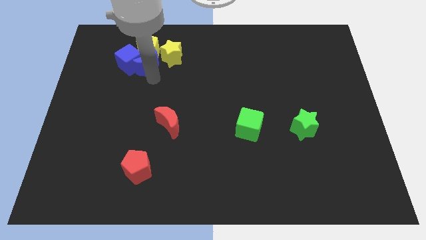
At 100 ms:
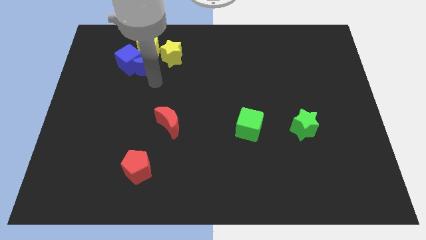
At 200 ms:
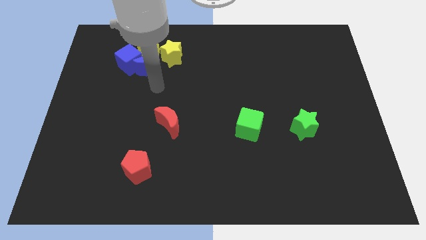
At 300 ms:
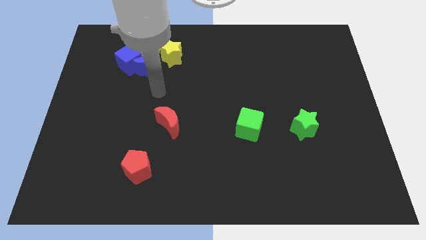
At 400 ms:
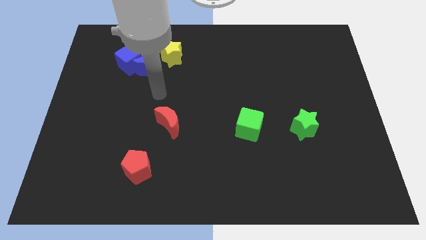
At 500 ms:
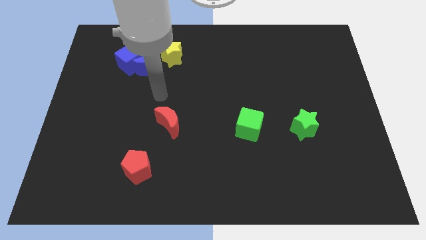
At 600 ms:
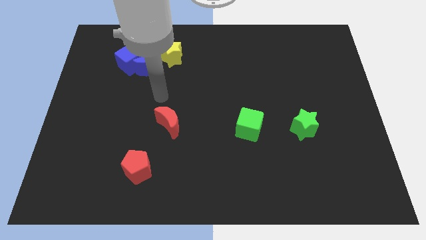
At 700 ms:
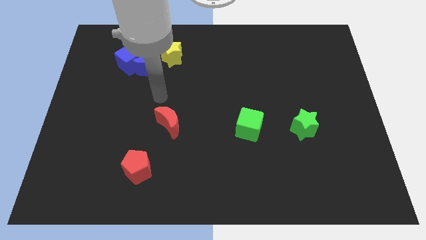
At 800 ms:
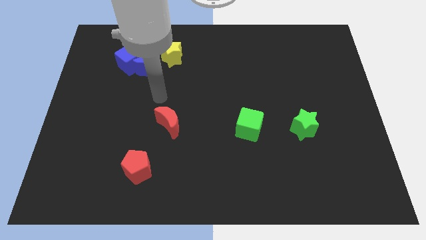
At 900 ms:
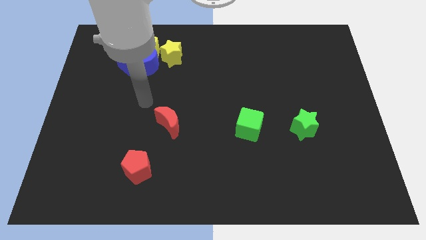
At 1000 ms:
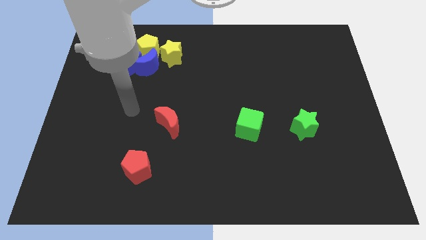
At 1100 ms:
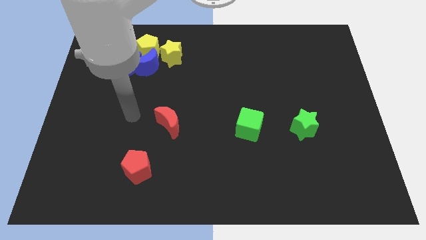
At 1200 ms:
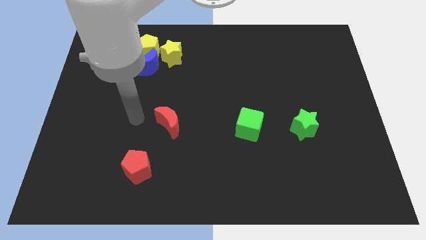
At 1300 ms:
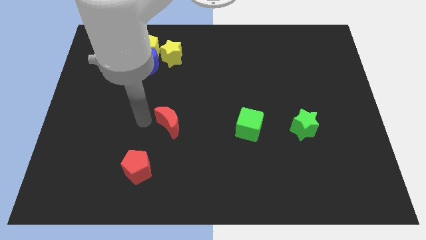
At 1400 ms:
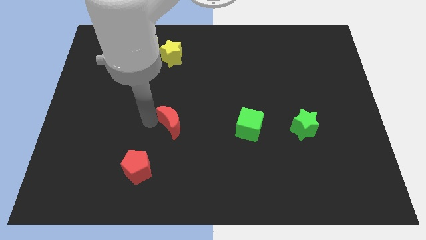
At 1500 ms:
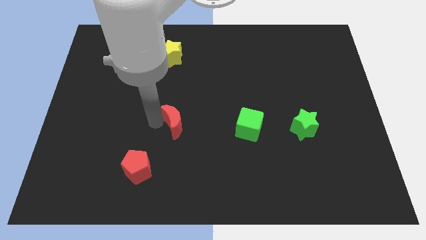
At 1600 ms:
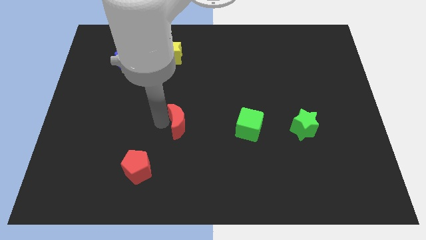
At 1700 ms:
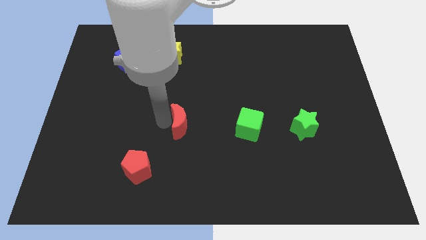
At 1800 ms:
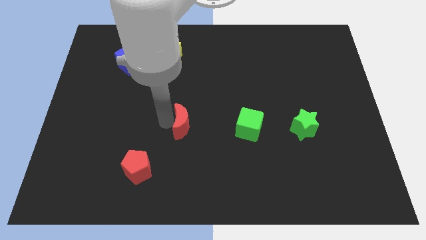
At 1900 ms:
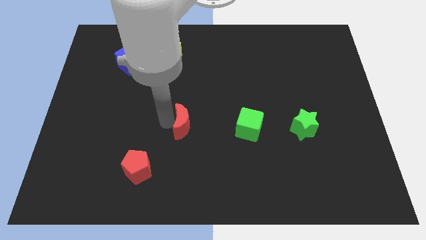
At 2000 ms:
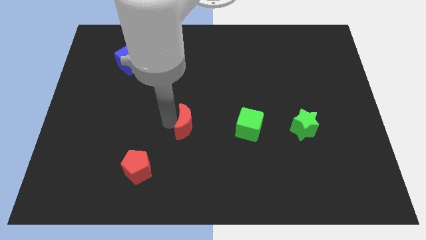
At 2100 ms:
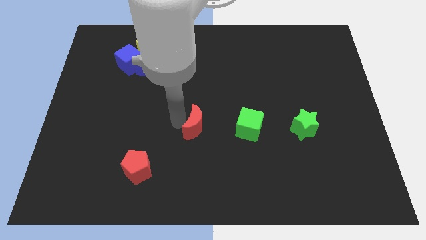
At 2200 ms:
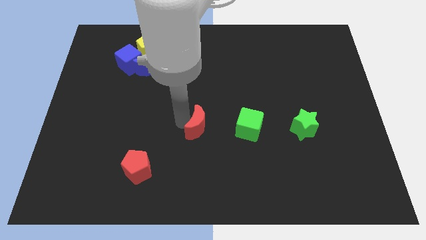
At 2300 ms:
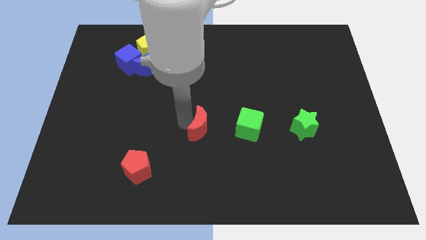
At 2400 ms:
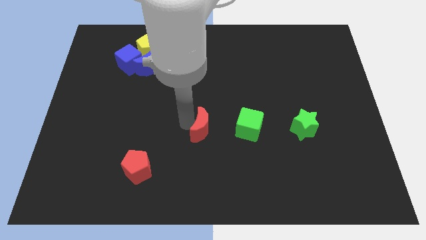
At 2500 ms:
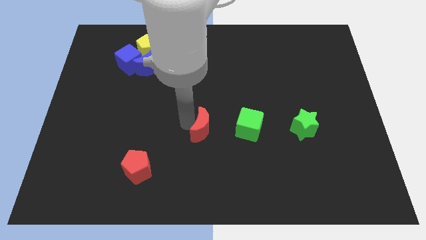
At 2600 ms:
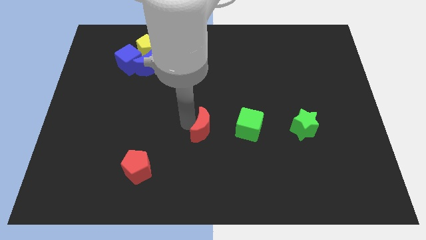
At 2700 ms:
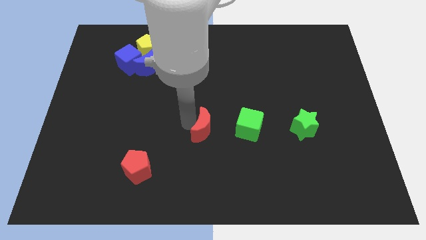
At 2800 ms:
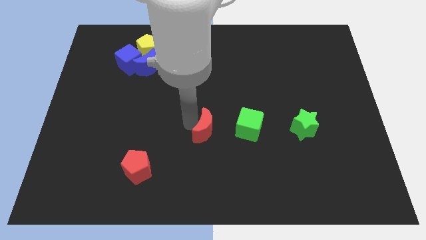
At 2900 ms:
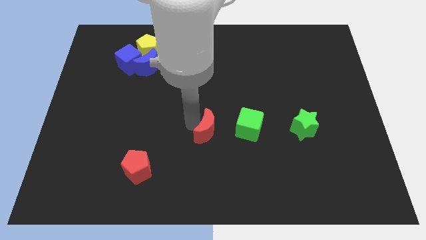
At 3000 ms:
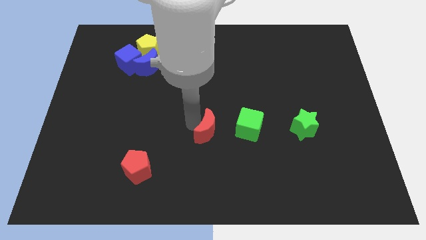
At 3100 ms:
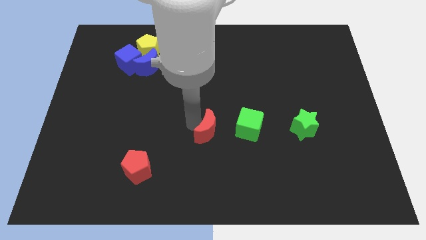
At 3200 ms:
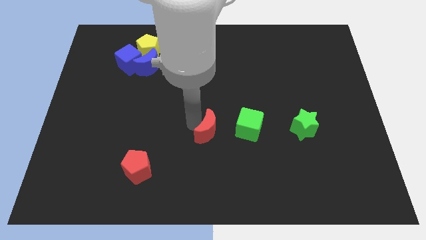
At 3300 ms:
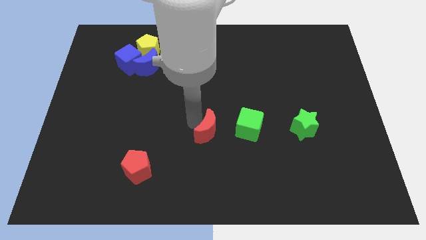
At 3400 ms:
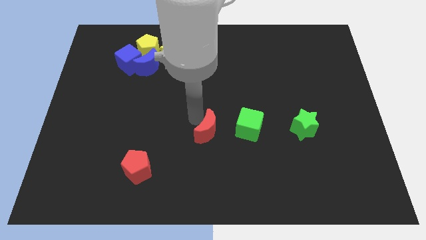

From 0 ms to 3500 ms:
move the red crescent parallel to the green cube

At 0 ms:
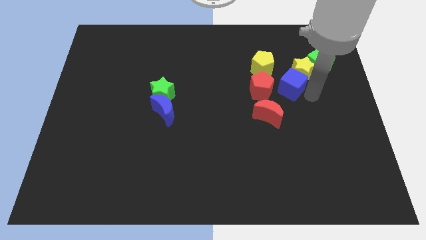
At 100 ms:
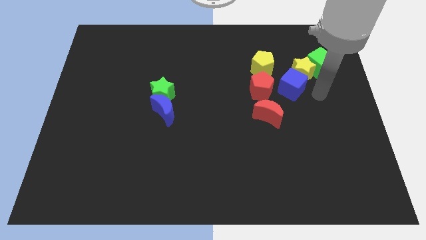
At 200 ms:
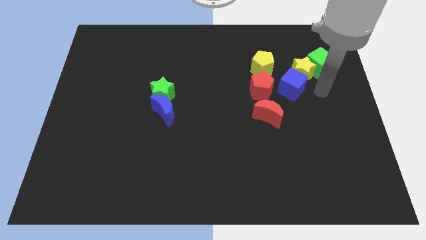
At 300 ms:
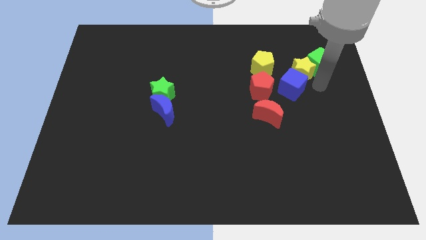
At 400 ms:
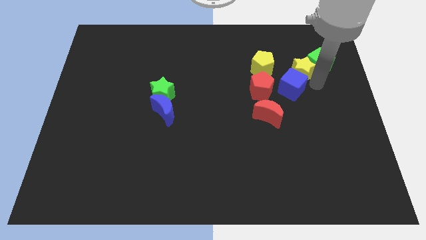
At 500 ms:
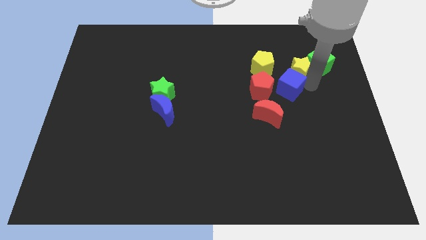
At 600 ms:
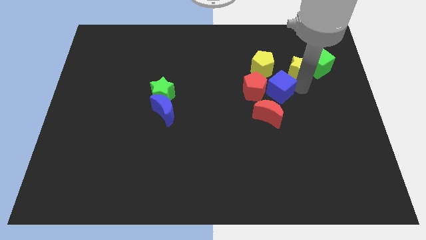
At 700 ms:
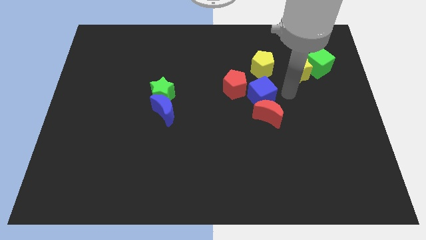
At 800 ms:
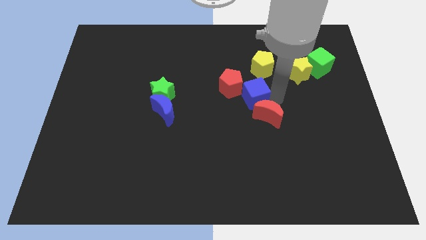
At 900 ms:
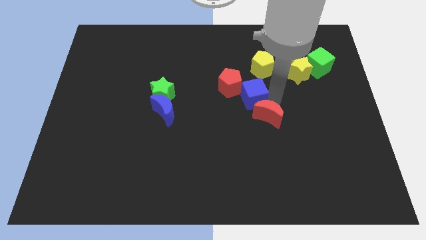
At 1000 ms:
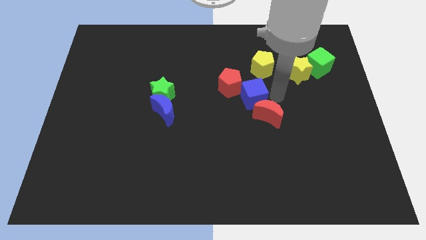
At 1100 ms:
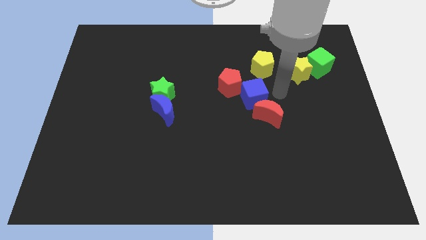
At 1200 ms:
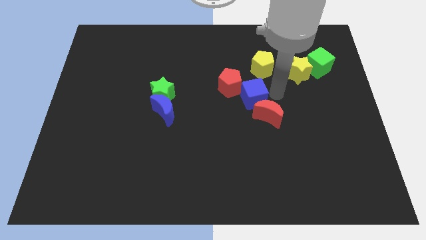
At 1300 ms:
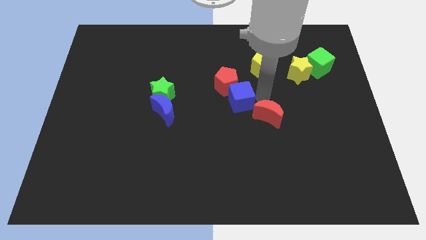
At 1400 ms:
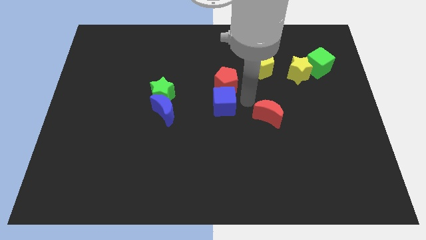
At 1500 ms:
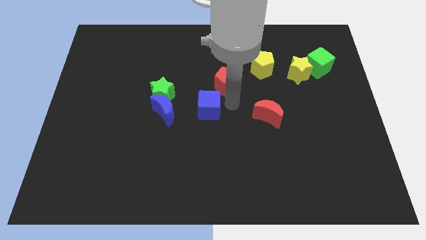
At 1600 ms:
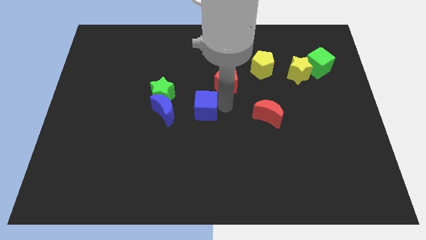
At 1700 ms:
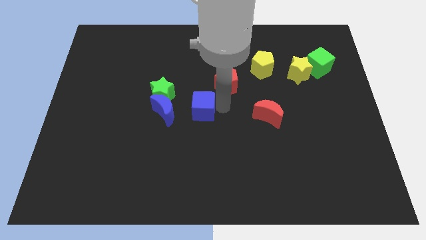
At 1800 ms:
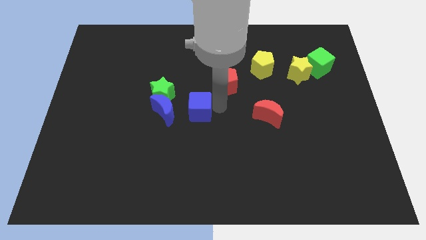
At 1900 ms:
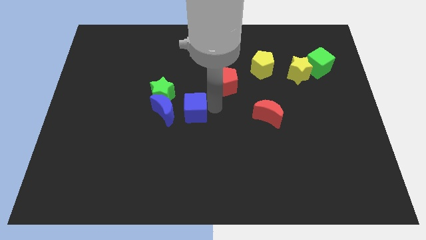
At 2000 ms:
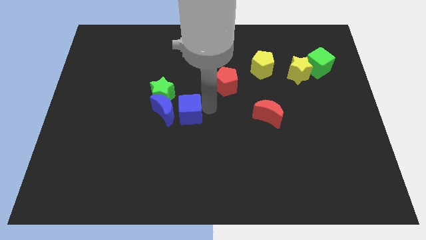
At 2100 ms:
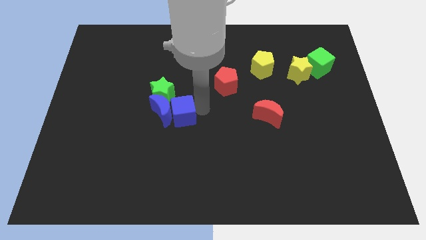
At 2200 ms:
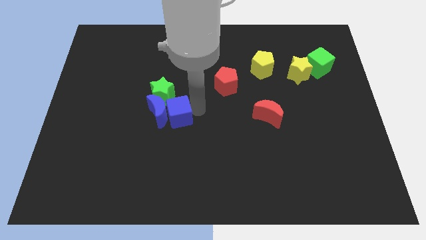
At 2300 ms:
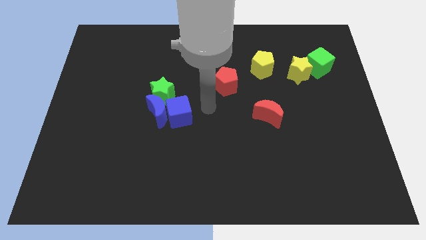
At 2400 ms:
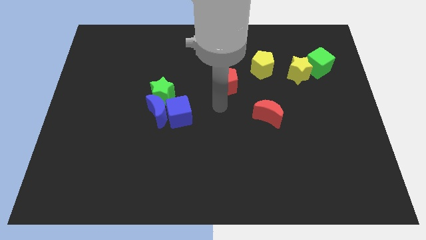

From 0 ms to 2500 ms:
move the blue cube into the blue moon to the right

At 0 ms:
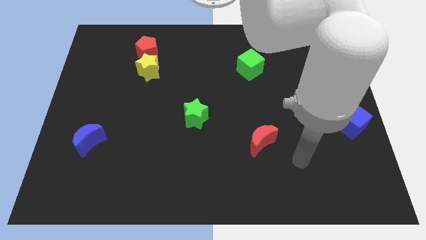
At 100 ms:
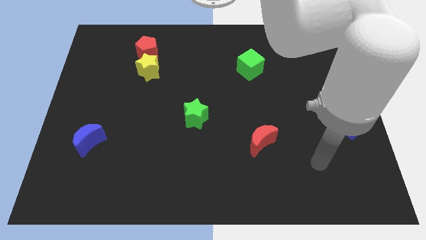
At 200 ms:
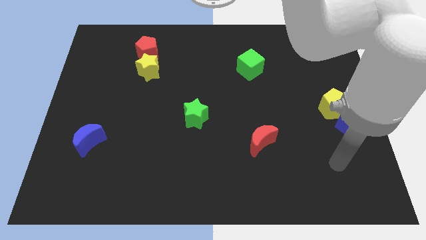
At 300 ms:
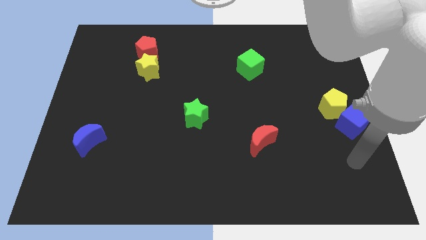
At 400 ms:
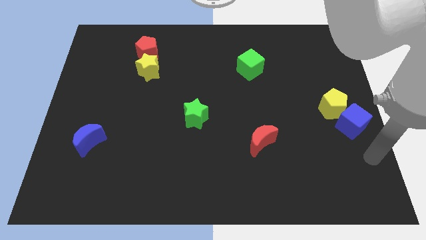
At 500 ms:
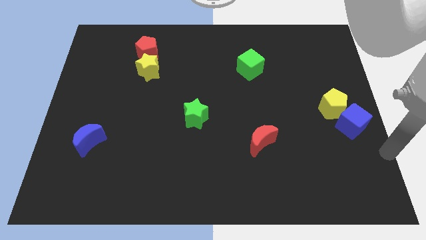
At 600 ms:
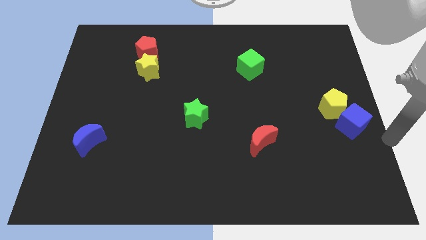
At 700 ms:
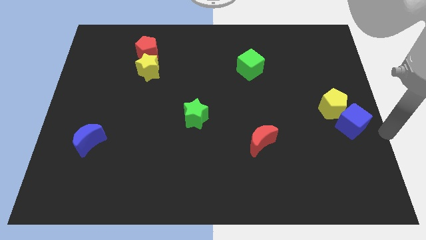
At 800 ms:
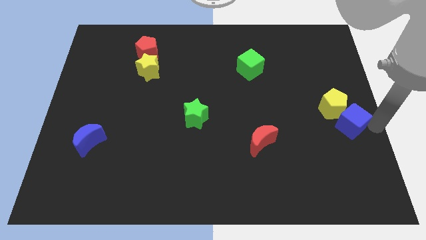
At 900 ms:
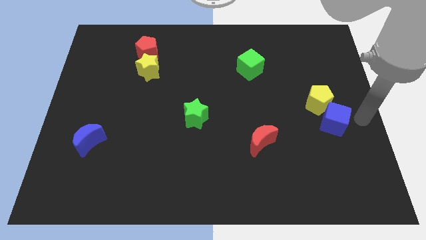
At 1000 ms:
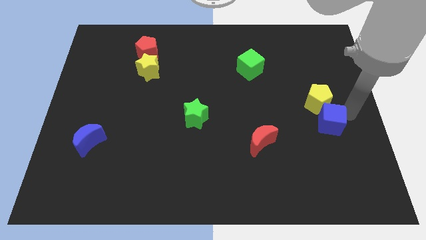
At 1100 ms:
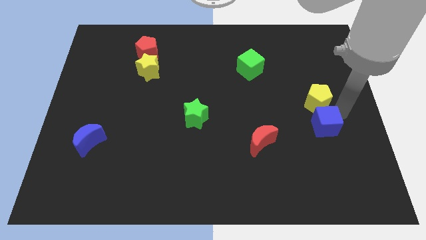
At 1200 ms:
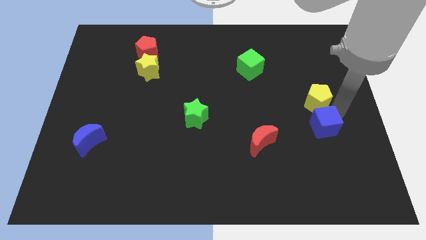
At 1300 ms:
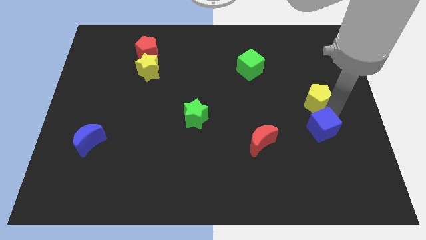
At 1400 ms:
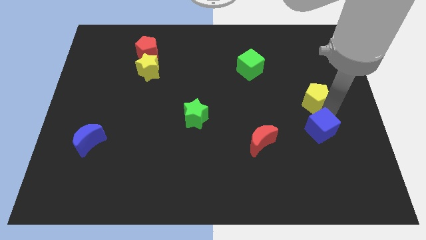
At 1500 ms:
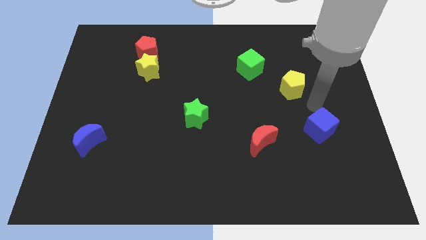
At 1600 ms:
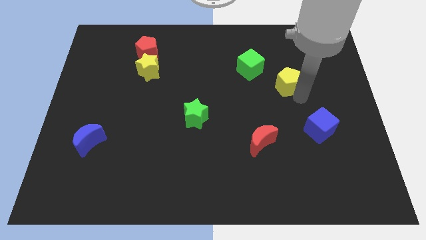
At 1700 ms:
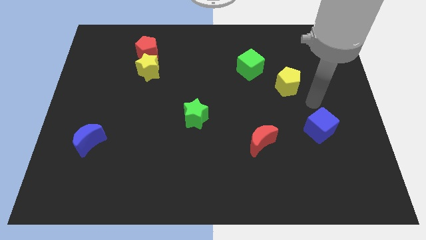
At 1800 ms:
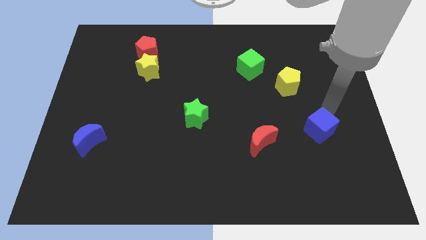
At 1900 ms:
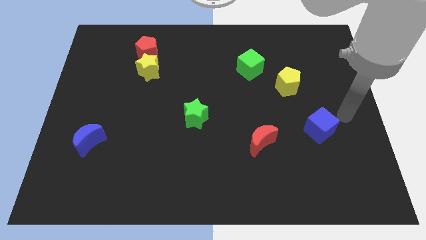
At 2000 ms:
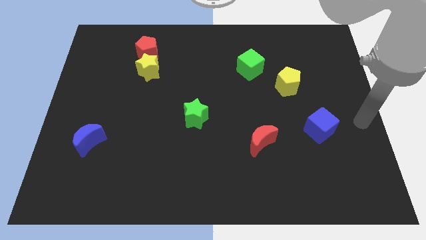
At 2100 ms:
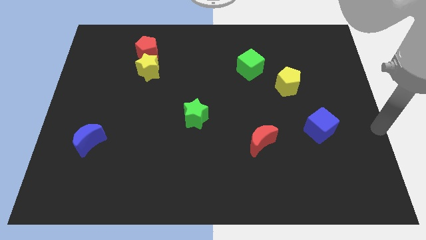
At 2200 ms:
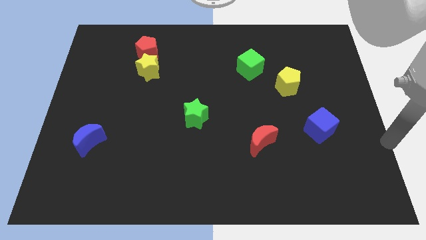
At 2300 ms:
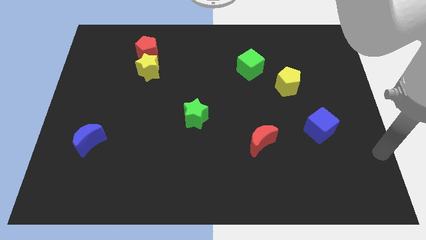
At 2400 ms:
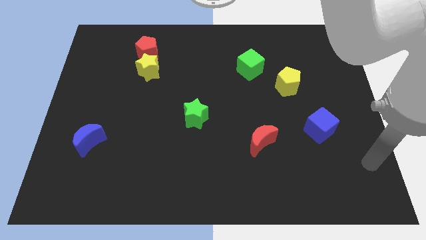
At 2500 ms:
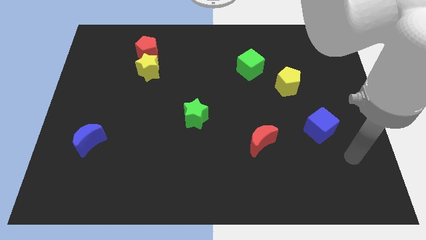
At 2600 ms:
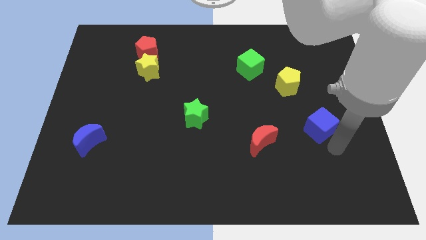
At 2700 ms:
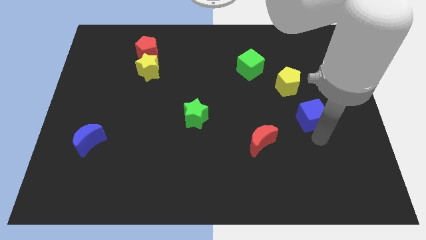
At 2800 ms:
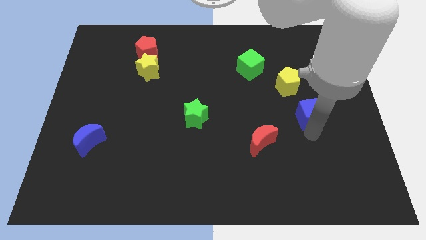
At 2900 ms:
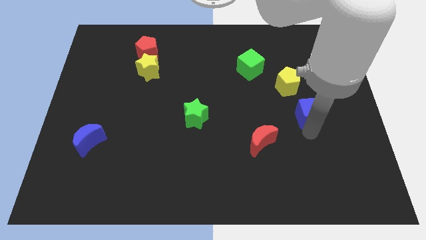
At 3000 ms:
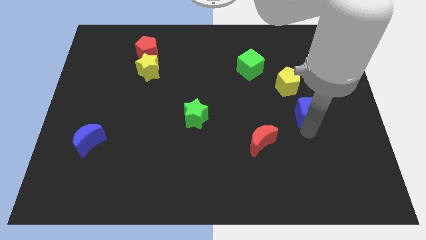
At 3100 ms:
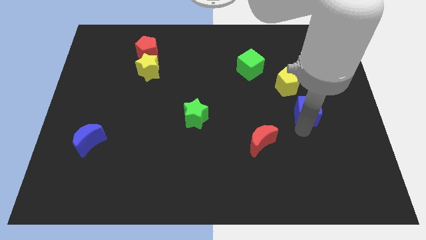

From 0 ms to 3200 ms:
move the yellow pentagon and the blue cube slightly to the top
